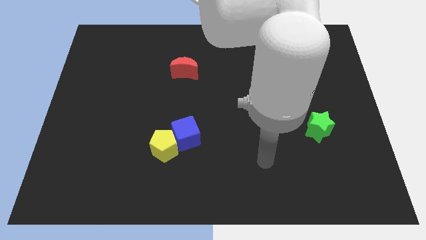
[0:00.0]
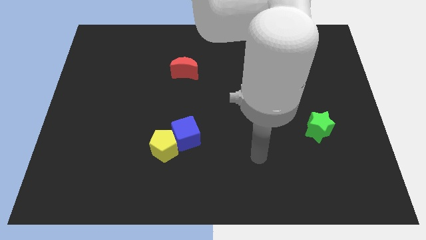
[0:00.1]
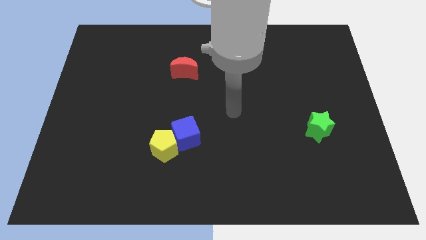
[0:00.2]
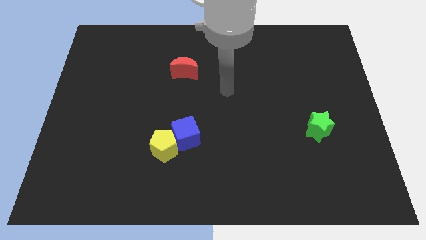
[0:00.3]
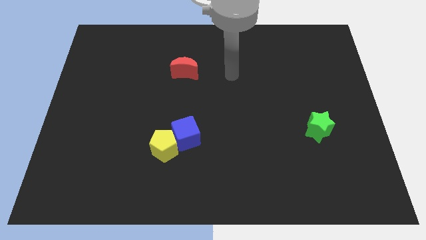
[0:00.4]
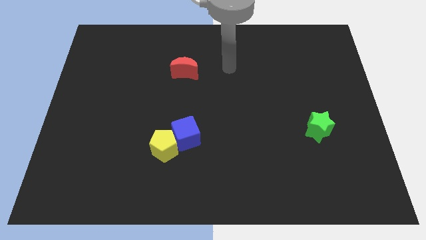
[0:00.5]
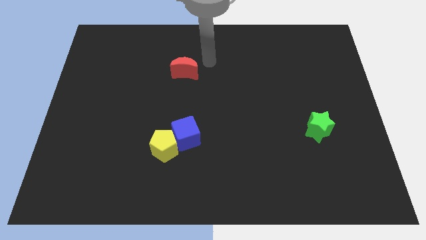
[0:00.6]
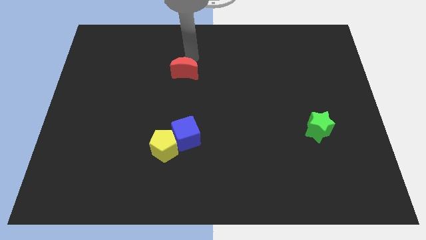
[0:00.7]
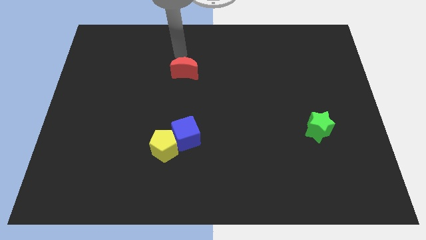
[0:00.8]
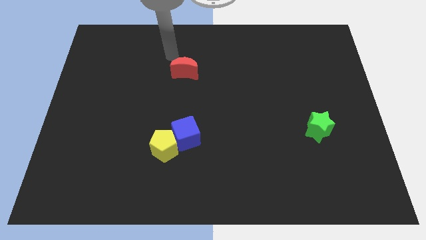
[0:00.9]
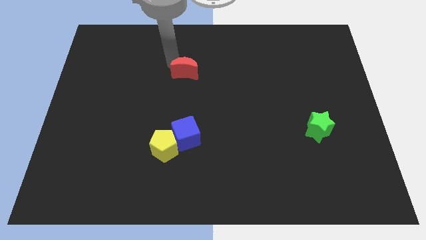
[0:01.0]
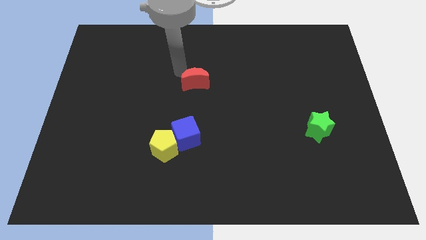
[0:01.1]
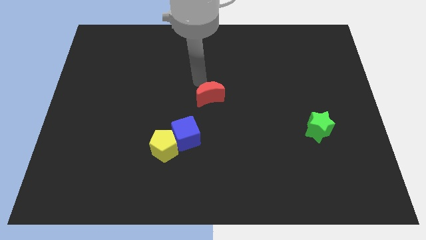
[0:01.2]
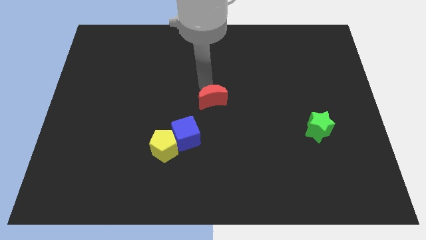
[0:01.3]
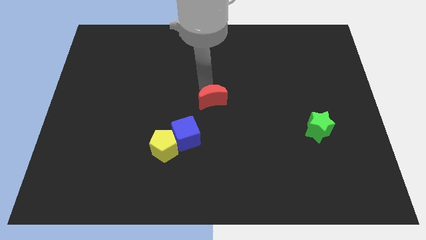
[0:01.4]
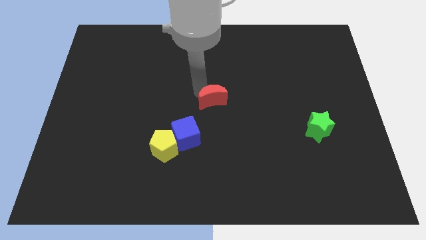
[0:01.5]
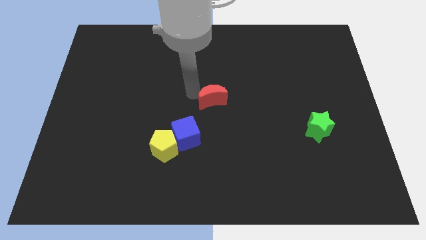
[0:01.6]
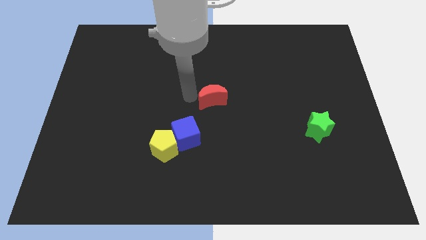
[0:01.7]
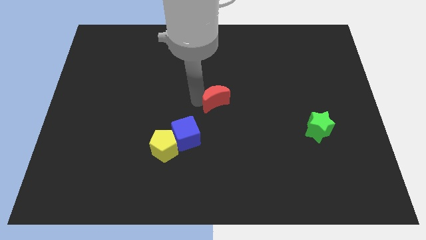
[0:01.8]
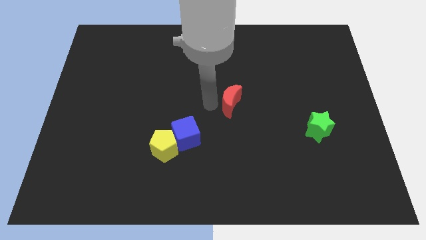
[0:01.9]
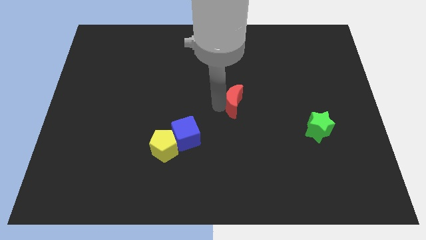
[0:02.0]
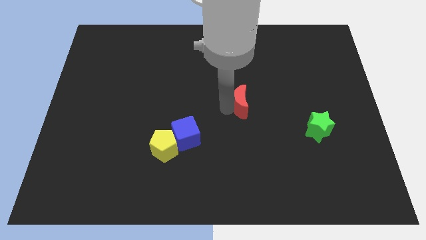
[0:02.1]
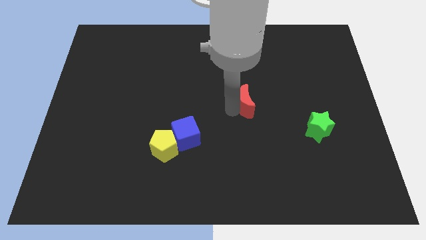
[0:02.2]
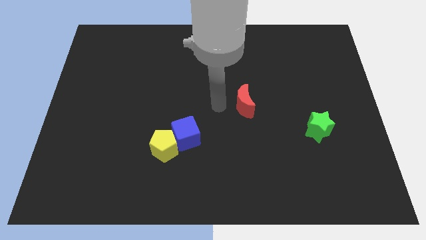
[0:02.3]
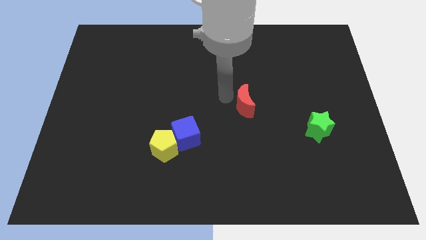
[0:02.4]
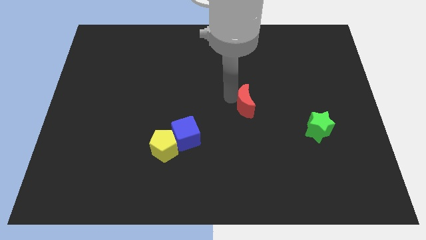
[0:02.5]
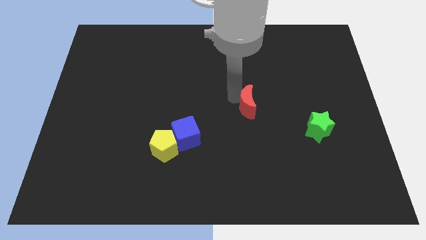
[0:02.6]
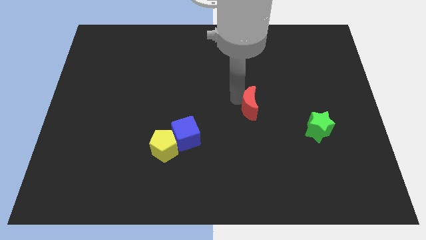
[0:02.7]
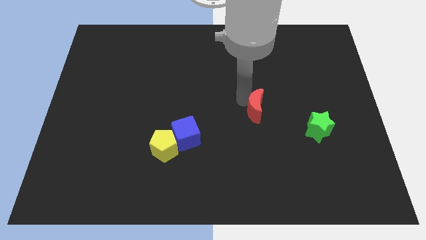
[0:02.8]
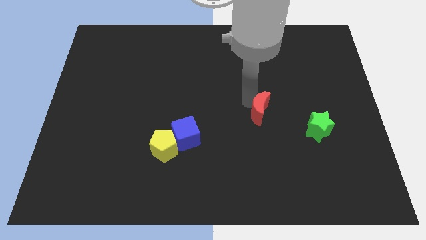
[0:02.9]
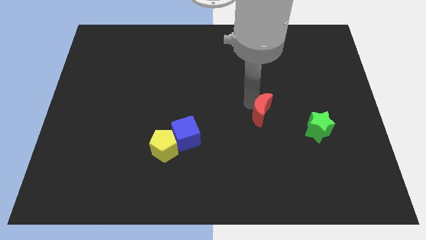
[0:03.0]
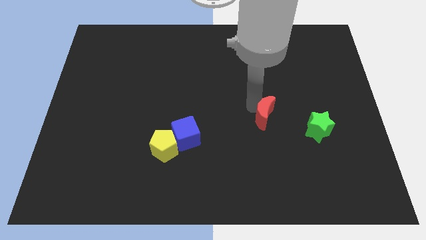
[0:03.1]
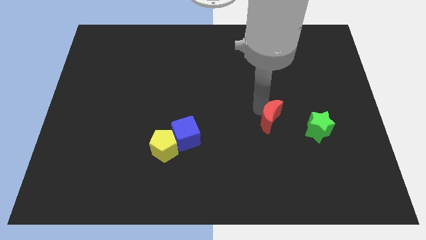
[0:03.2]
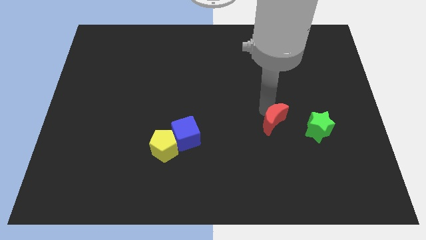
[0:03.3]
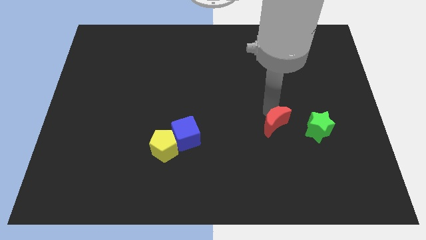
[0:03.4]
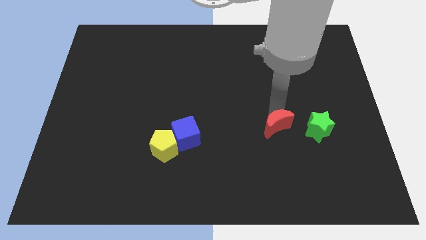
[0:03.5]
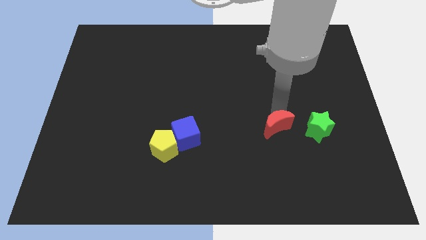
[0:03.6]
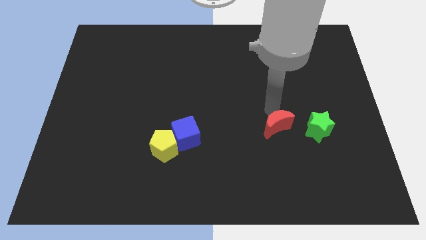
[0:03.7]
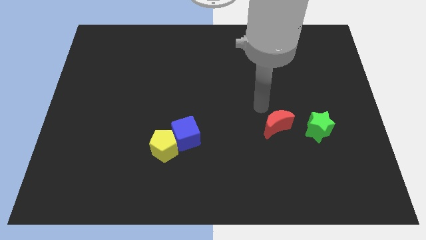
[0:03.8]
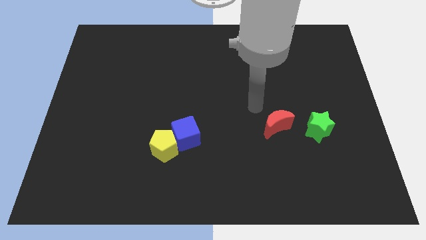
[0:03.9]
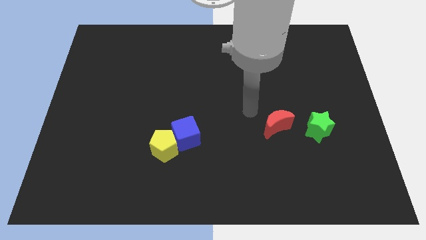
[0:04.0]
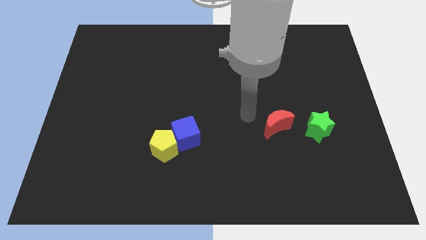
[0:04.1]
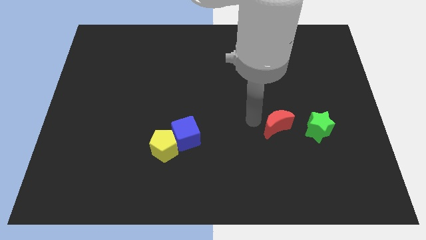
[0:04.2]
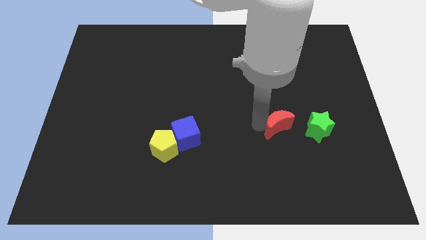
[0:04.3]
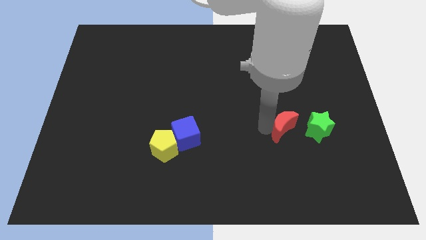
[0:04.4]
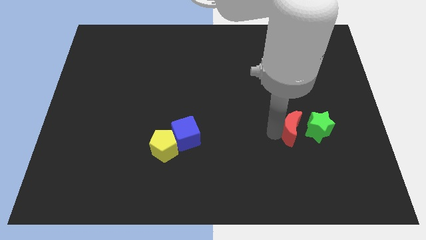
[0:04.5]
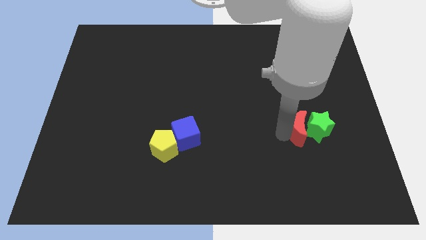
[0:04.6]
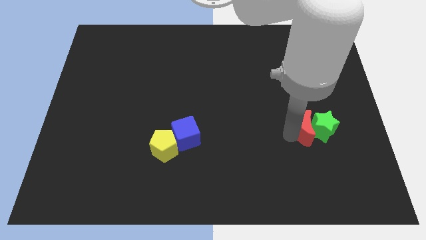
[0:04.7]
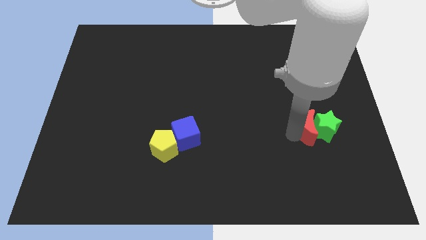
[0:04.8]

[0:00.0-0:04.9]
push the red block close to the green block

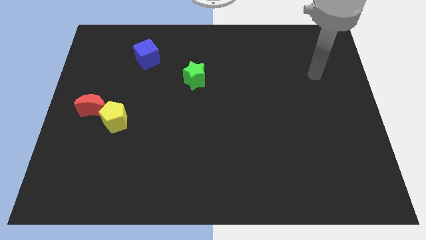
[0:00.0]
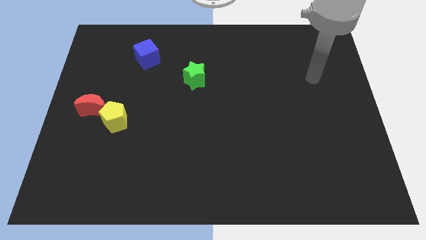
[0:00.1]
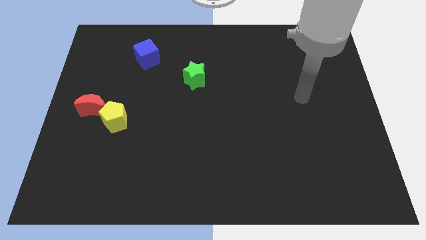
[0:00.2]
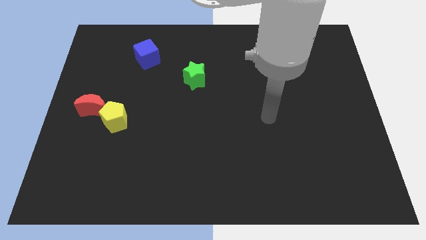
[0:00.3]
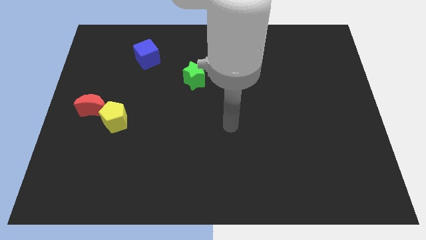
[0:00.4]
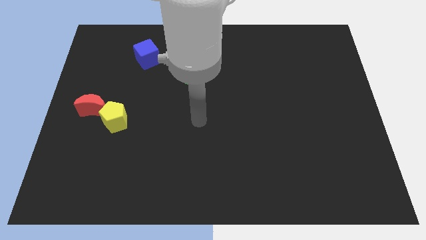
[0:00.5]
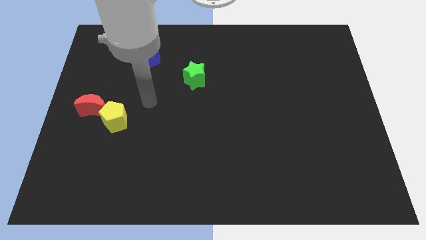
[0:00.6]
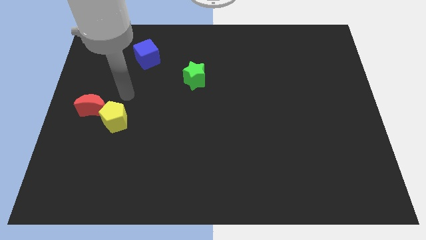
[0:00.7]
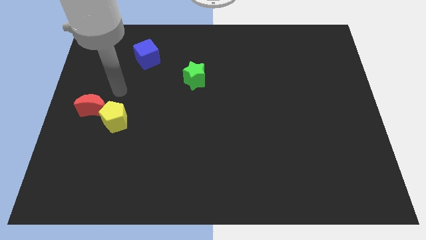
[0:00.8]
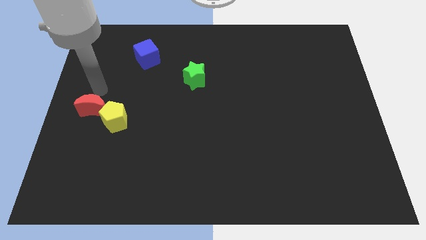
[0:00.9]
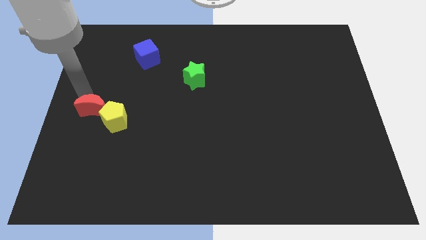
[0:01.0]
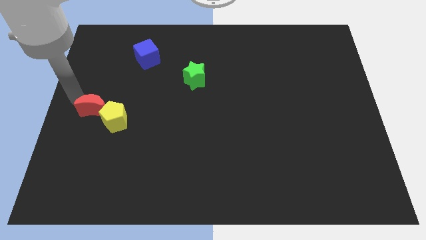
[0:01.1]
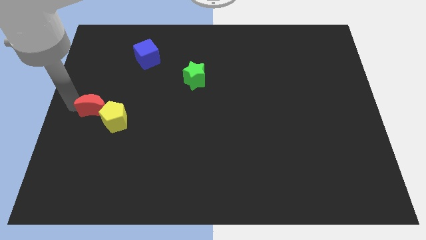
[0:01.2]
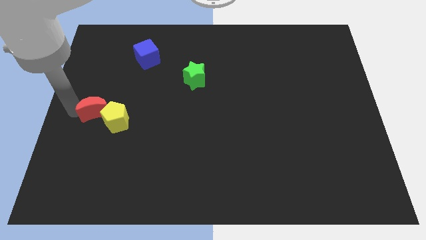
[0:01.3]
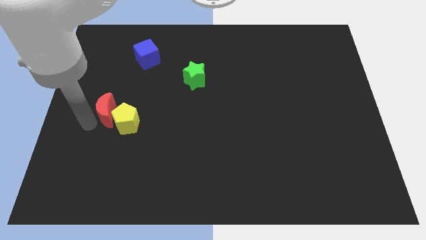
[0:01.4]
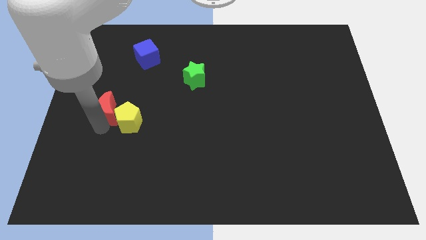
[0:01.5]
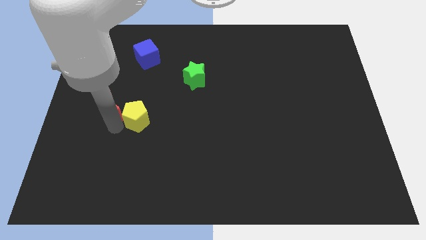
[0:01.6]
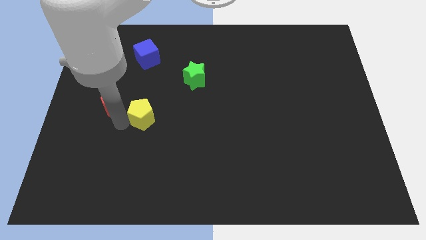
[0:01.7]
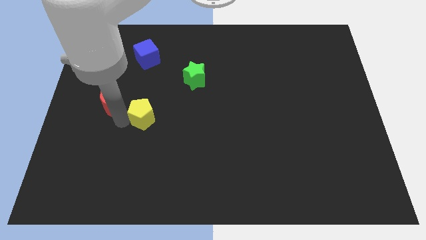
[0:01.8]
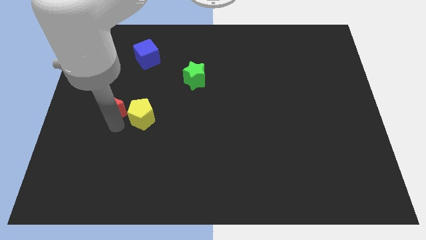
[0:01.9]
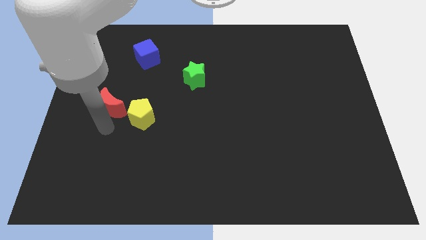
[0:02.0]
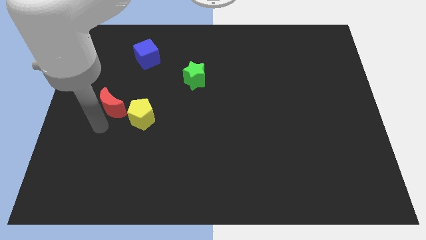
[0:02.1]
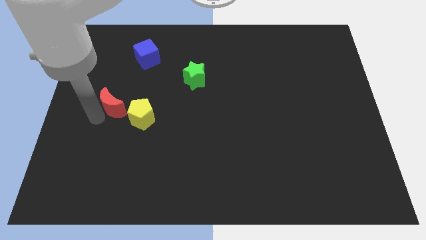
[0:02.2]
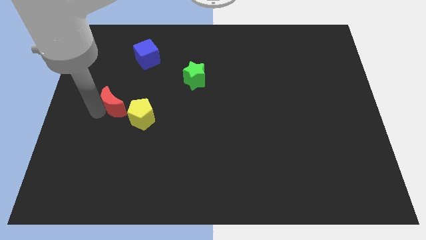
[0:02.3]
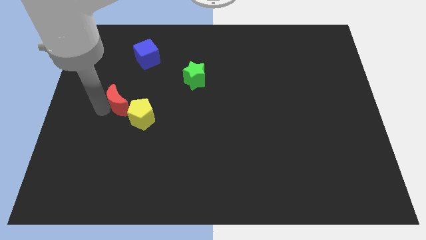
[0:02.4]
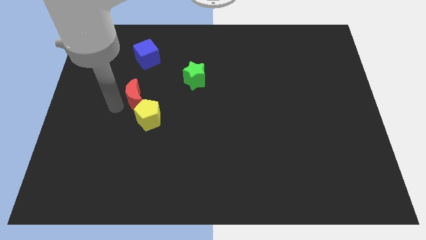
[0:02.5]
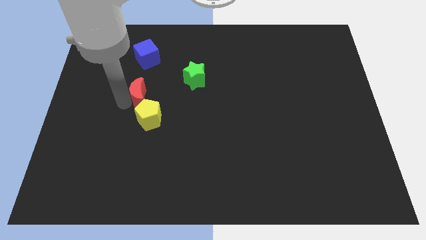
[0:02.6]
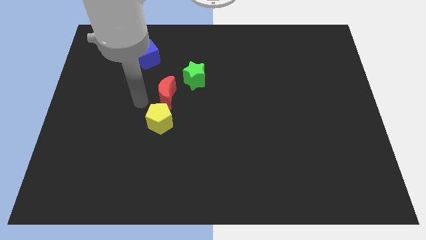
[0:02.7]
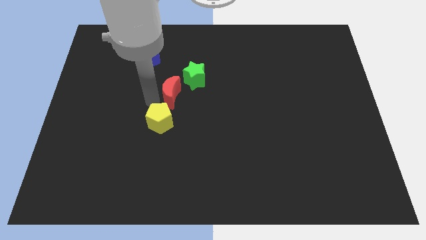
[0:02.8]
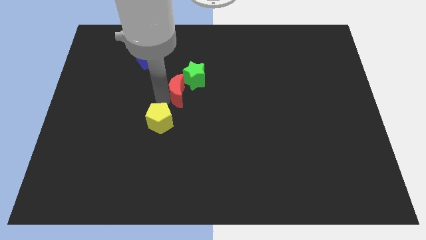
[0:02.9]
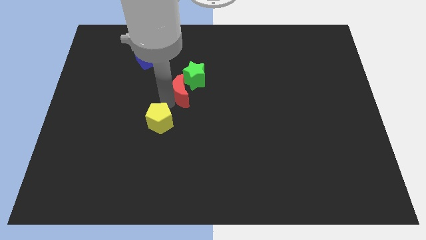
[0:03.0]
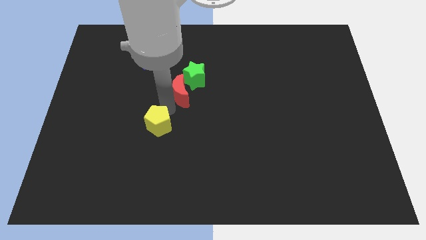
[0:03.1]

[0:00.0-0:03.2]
push the moon to the green block

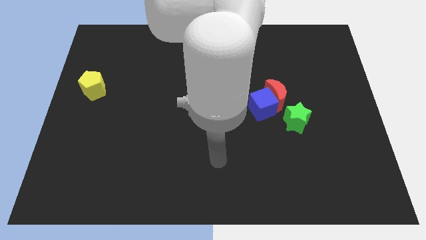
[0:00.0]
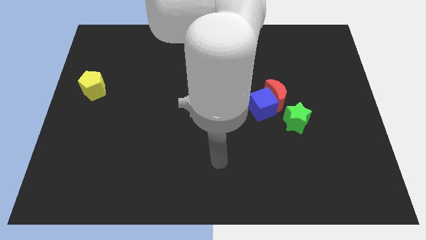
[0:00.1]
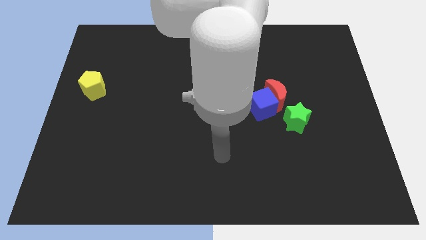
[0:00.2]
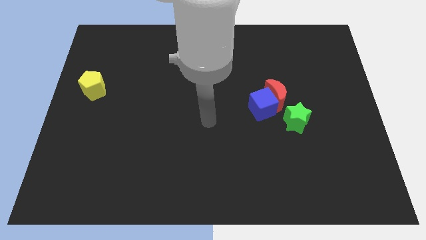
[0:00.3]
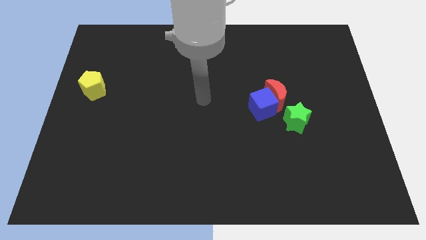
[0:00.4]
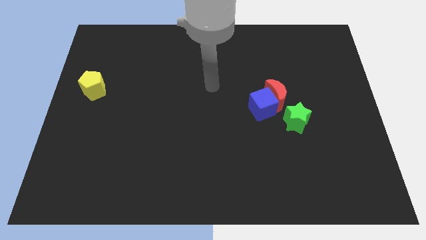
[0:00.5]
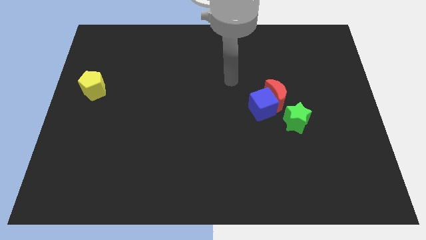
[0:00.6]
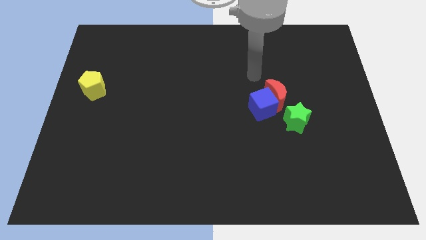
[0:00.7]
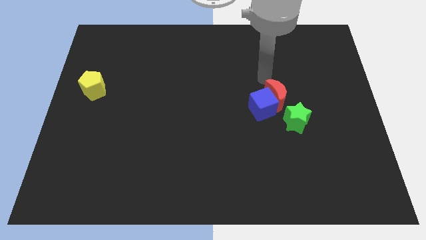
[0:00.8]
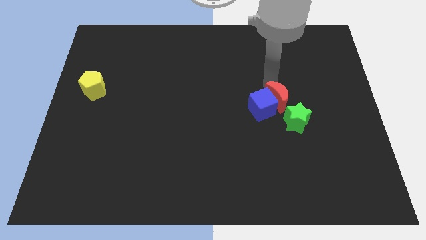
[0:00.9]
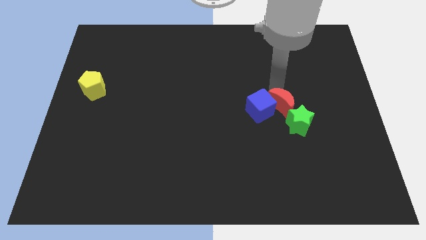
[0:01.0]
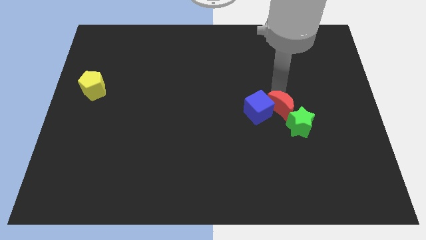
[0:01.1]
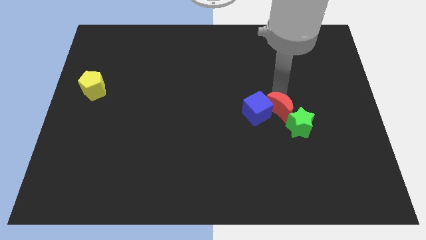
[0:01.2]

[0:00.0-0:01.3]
push the moon close to the green star
